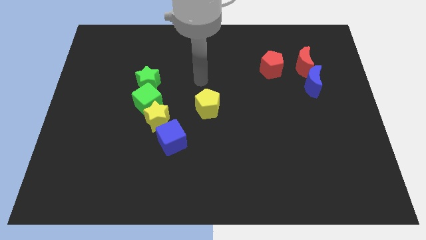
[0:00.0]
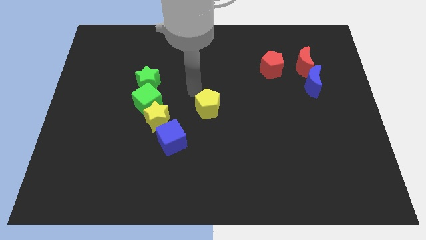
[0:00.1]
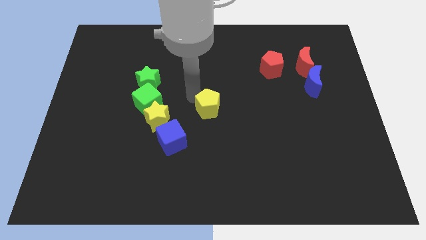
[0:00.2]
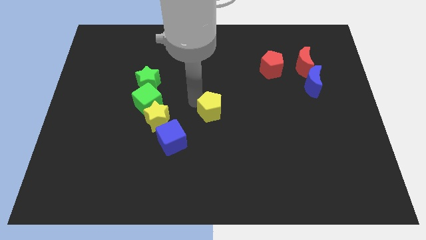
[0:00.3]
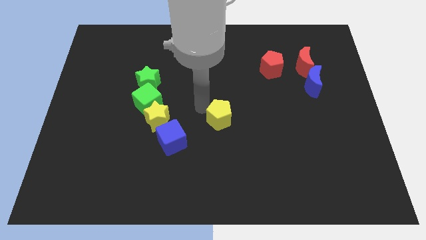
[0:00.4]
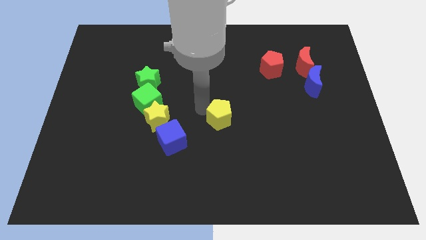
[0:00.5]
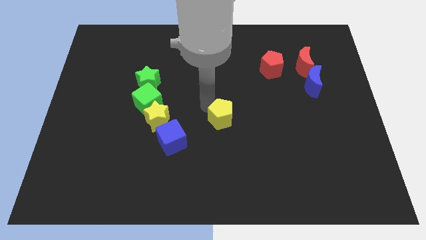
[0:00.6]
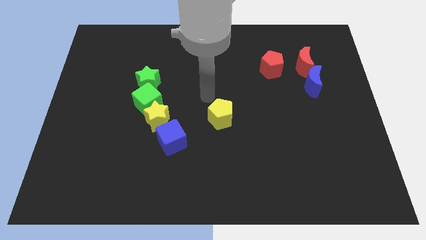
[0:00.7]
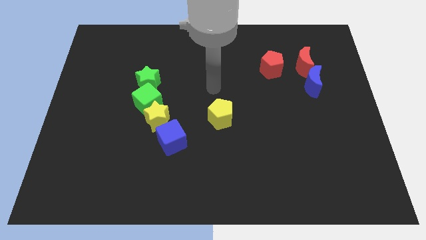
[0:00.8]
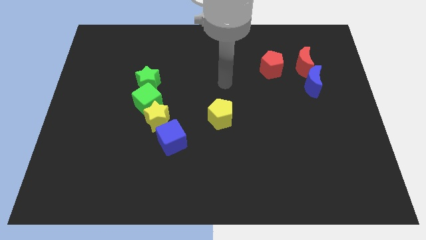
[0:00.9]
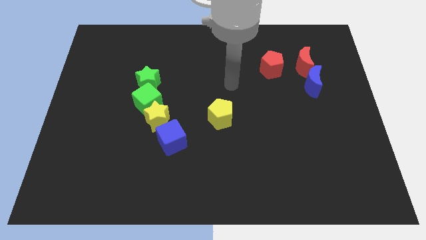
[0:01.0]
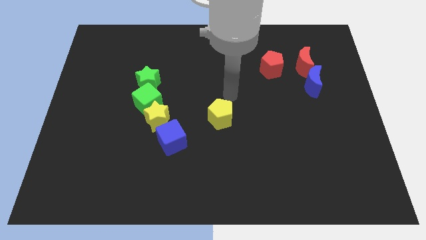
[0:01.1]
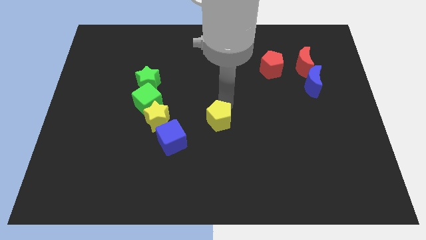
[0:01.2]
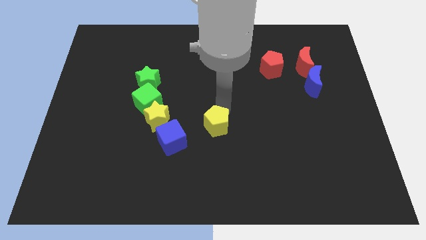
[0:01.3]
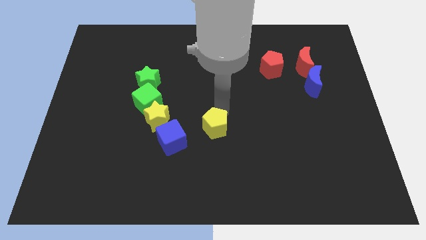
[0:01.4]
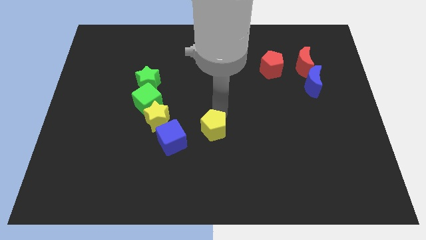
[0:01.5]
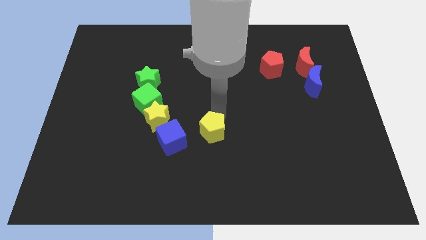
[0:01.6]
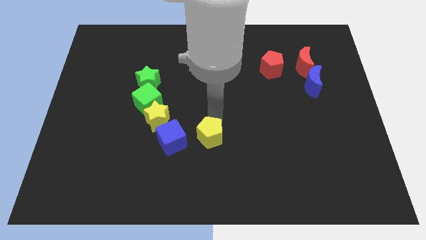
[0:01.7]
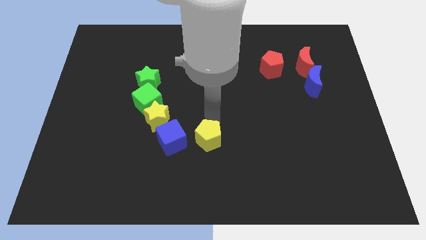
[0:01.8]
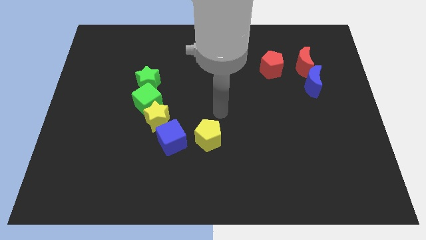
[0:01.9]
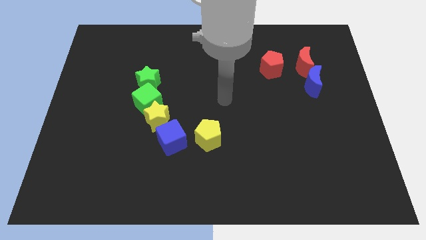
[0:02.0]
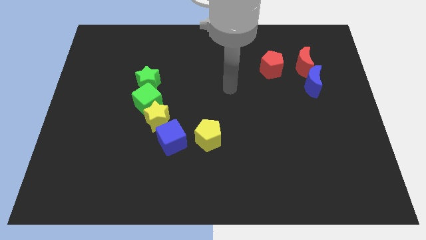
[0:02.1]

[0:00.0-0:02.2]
push the yellow pentagon to bottom right of blue cube

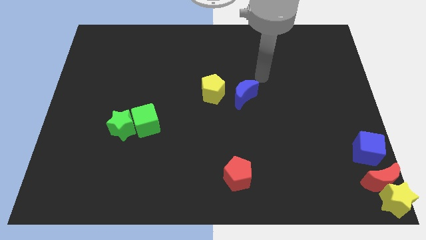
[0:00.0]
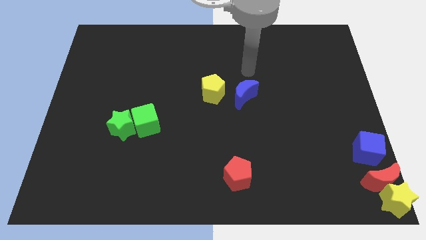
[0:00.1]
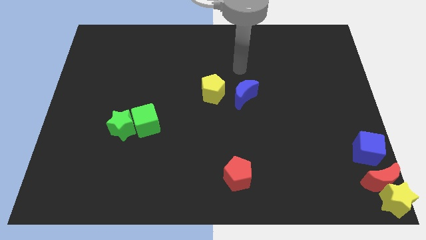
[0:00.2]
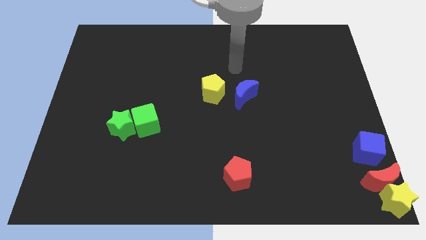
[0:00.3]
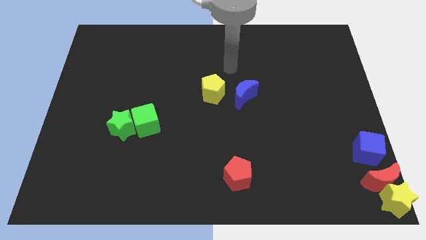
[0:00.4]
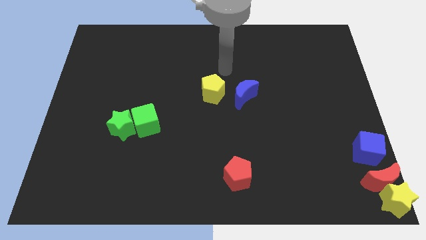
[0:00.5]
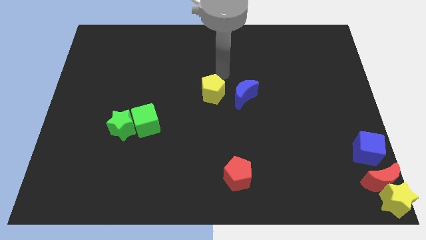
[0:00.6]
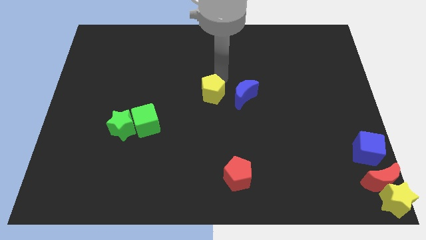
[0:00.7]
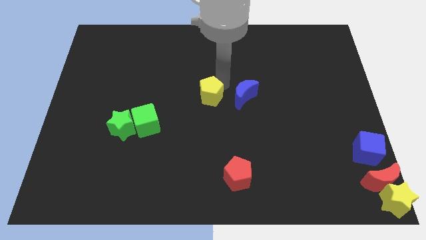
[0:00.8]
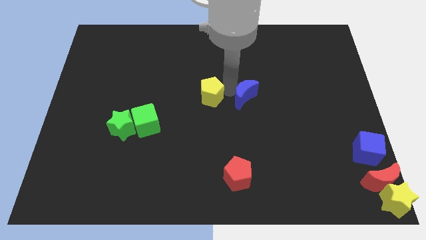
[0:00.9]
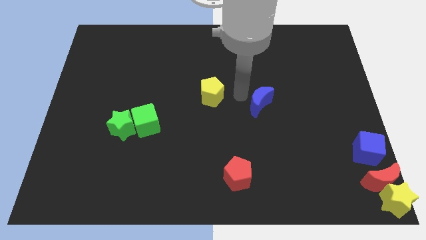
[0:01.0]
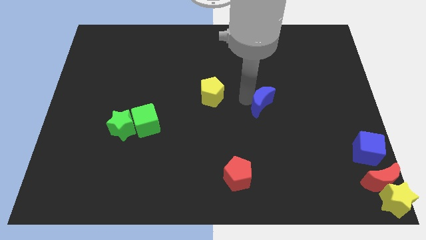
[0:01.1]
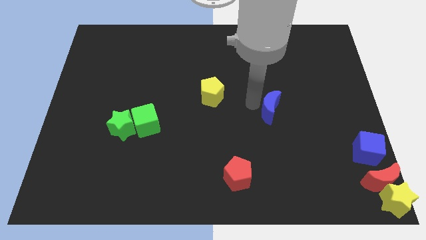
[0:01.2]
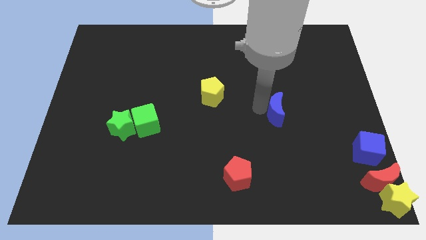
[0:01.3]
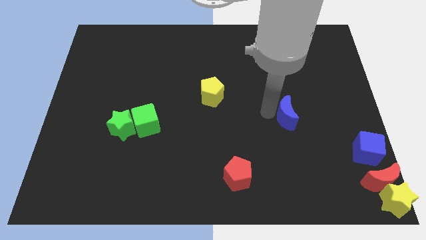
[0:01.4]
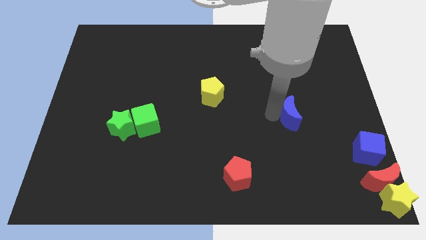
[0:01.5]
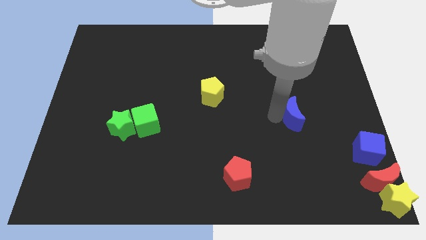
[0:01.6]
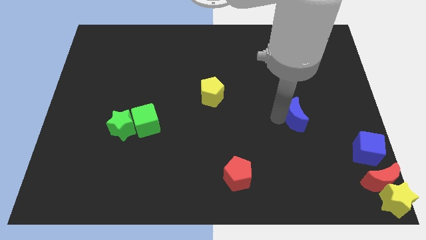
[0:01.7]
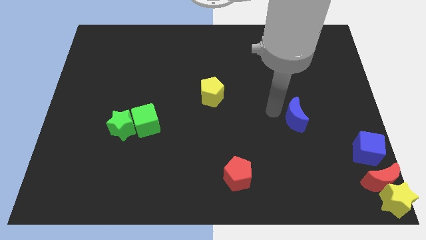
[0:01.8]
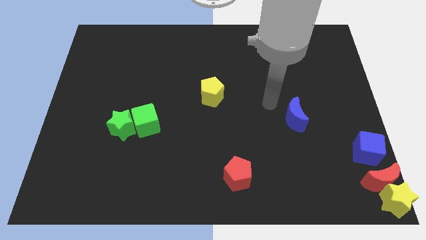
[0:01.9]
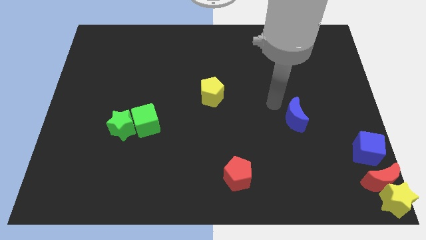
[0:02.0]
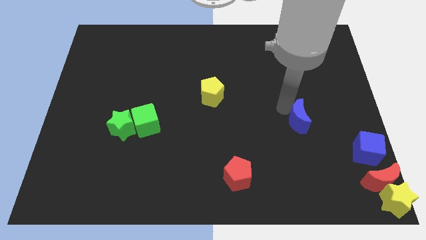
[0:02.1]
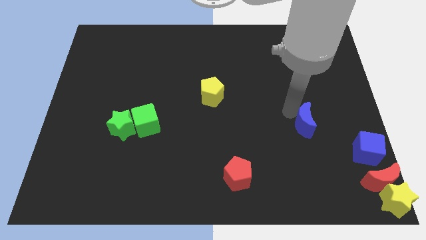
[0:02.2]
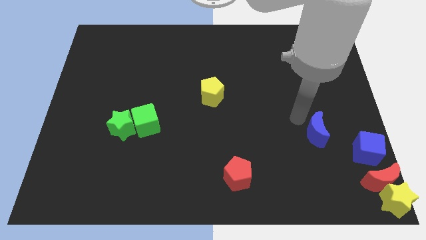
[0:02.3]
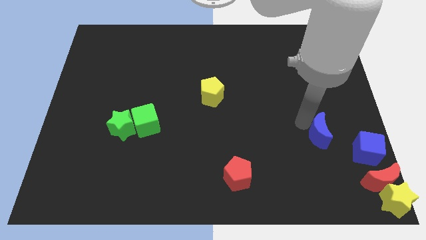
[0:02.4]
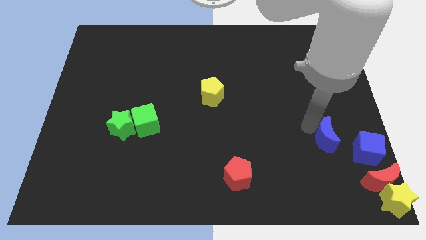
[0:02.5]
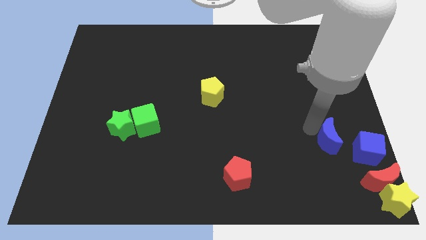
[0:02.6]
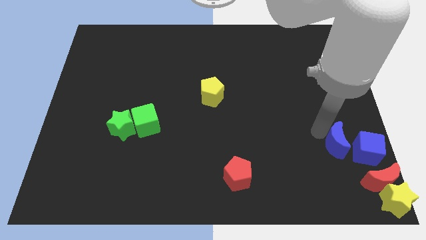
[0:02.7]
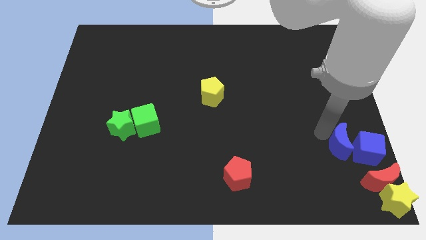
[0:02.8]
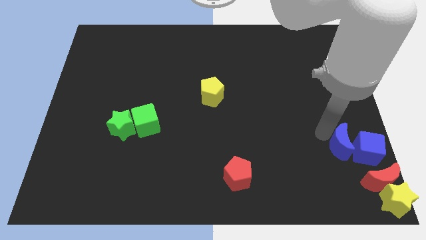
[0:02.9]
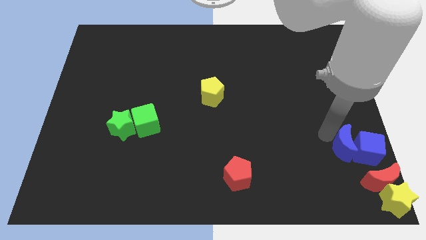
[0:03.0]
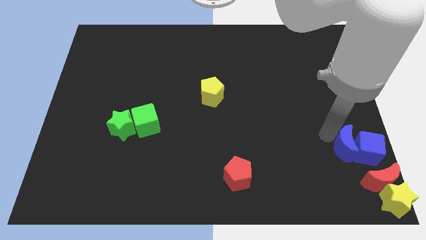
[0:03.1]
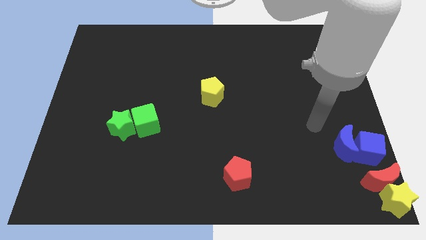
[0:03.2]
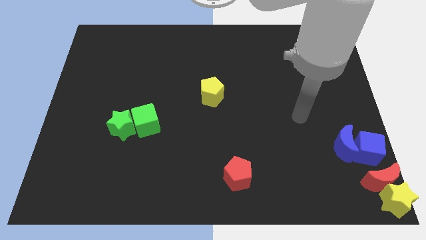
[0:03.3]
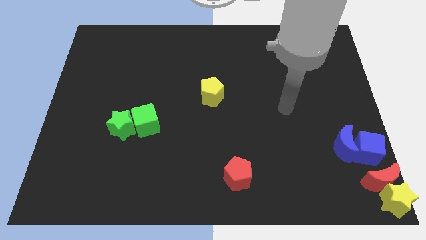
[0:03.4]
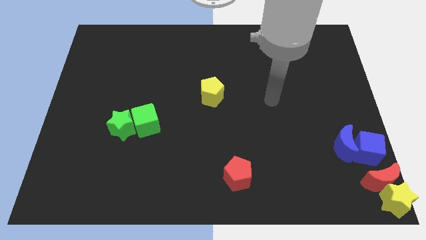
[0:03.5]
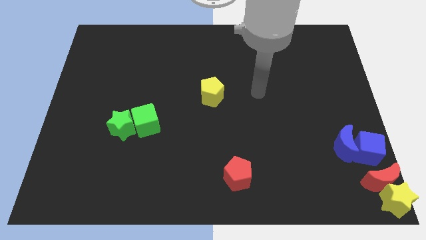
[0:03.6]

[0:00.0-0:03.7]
move the blue moon into the blue cube

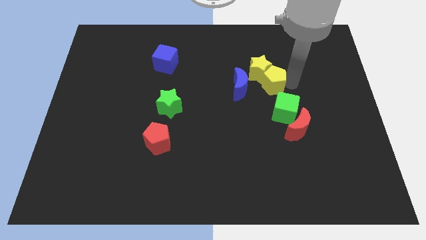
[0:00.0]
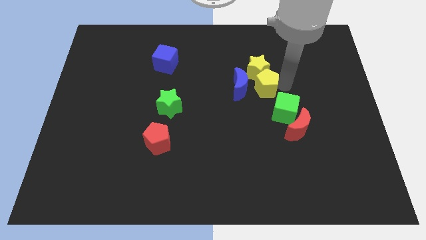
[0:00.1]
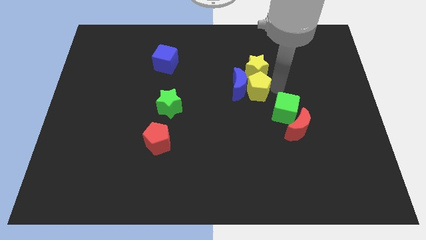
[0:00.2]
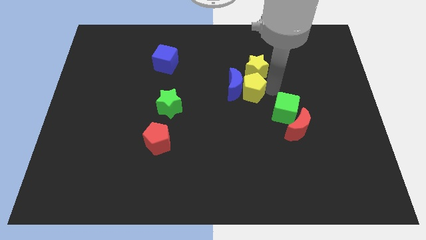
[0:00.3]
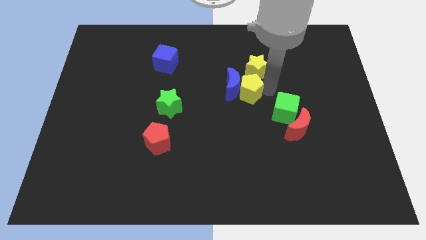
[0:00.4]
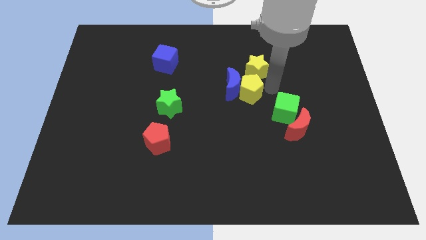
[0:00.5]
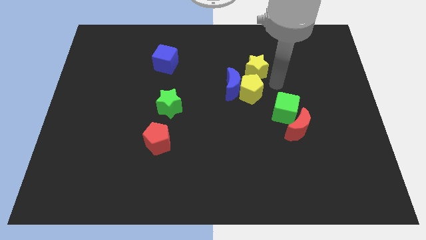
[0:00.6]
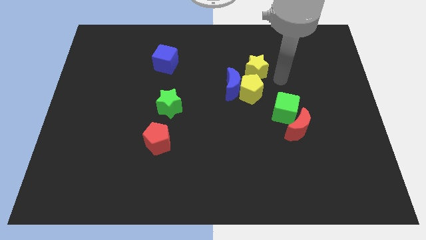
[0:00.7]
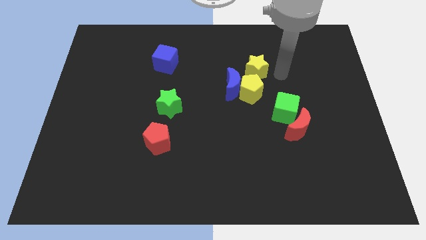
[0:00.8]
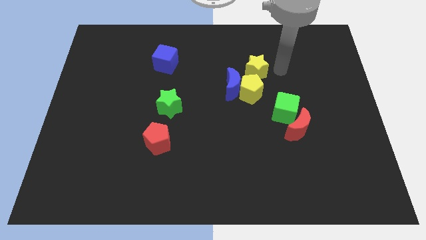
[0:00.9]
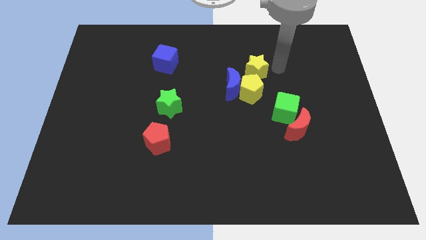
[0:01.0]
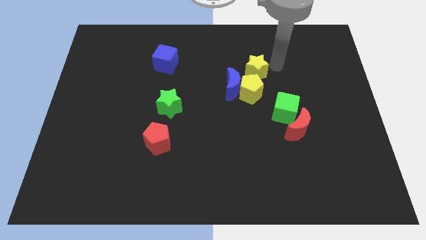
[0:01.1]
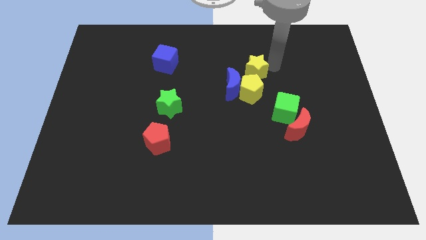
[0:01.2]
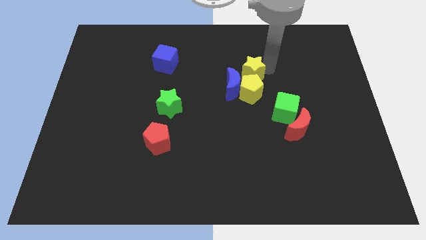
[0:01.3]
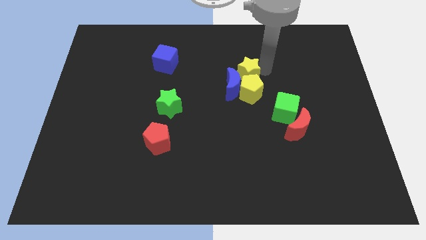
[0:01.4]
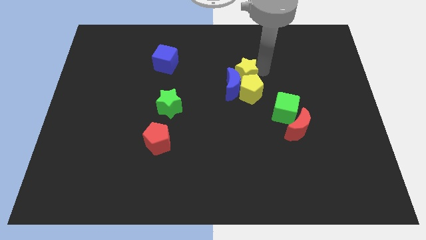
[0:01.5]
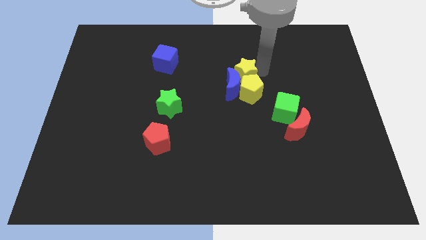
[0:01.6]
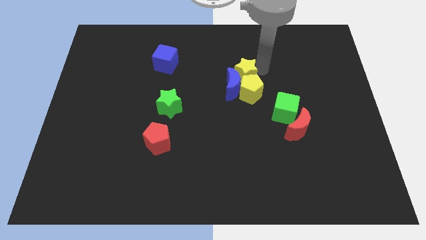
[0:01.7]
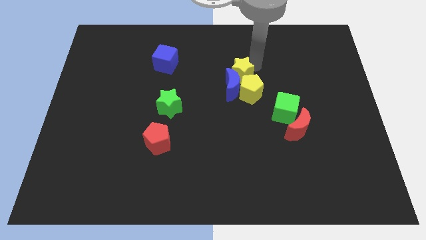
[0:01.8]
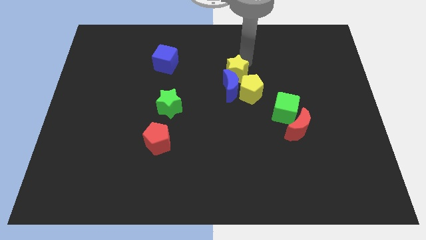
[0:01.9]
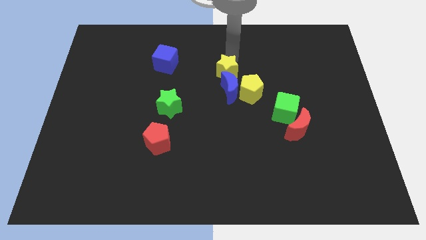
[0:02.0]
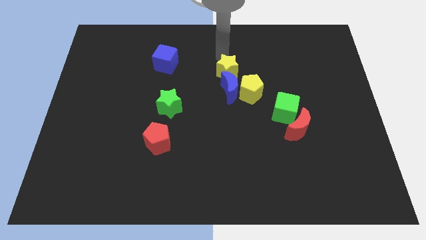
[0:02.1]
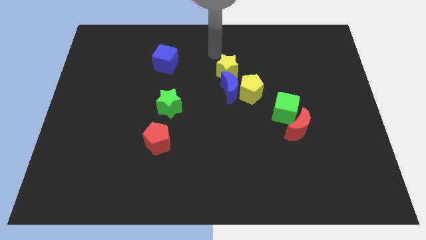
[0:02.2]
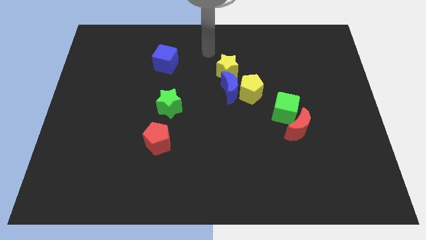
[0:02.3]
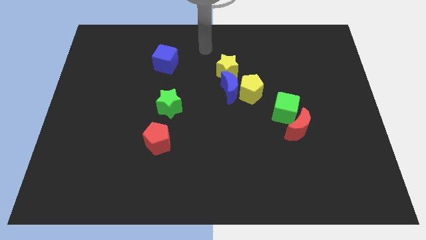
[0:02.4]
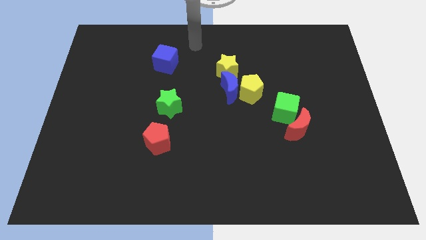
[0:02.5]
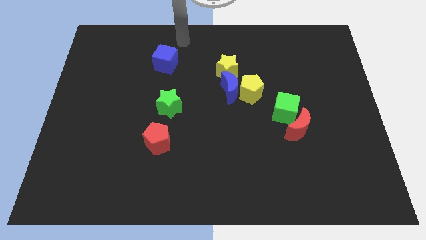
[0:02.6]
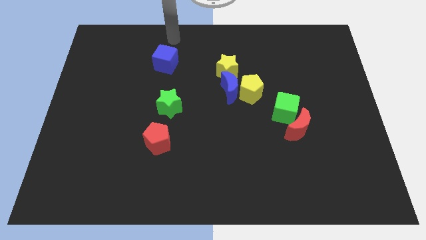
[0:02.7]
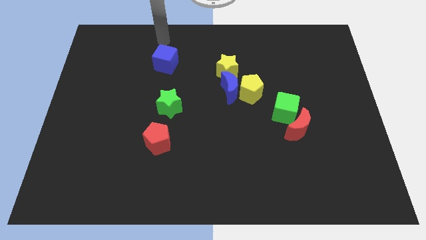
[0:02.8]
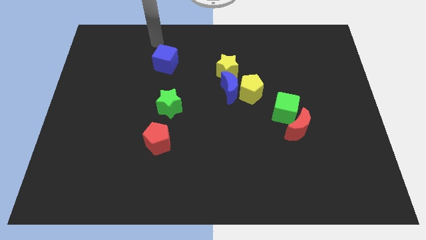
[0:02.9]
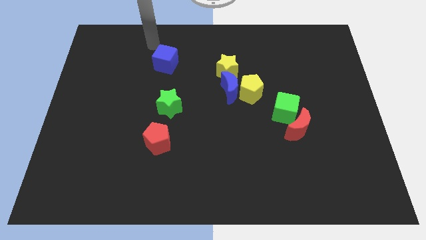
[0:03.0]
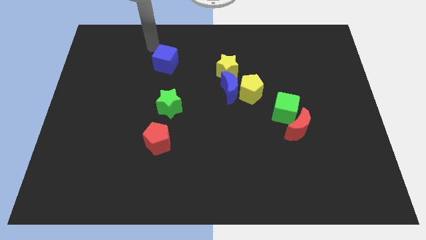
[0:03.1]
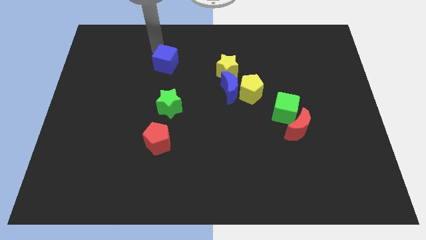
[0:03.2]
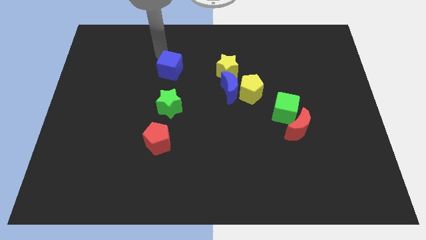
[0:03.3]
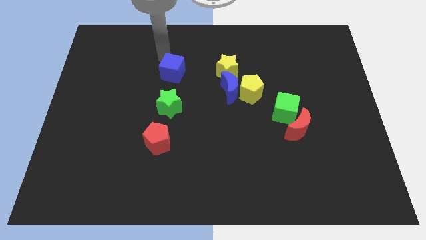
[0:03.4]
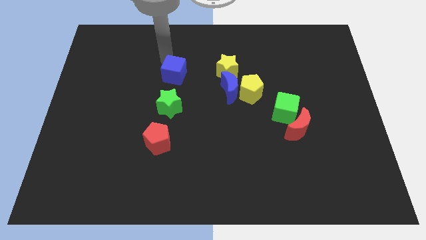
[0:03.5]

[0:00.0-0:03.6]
place the blue cube left to the yellow star
